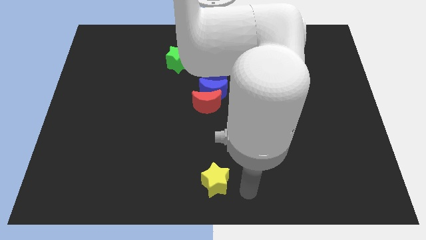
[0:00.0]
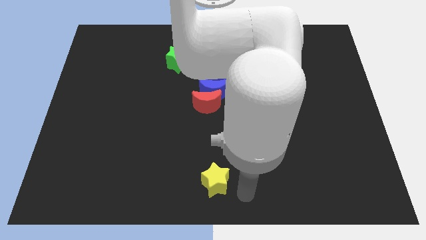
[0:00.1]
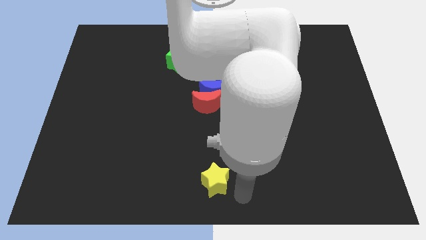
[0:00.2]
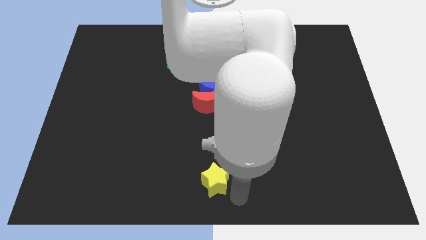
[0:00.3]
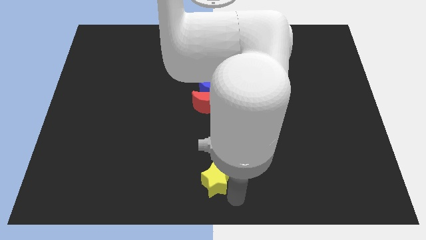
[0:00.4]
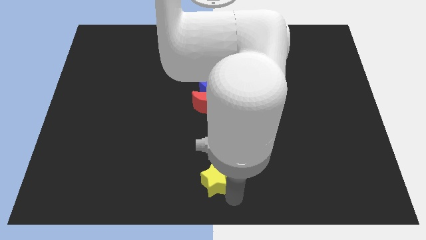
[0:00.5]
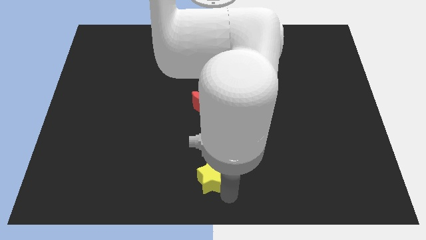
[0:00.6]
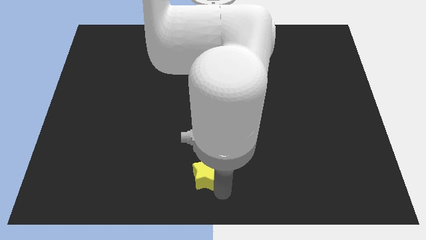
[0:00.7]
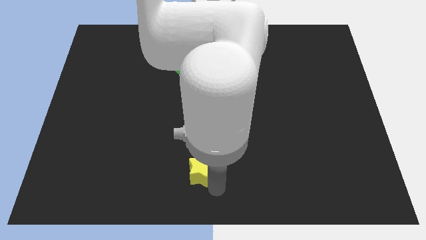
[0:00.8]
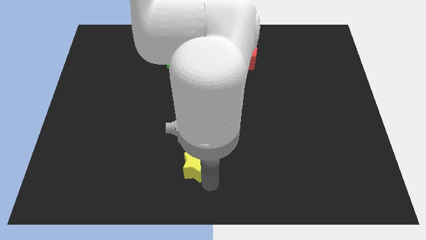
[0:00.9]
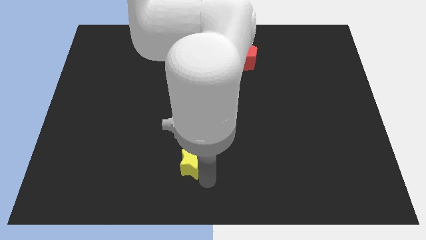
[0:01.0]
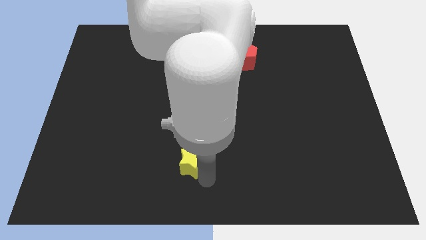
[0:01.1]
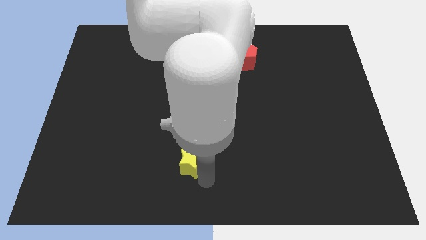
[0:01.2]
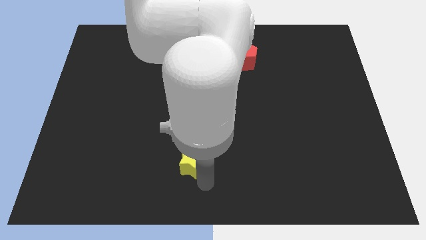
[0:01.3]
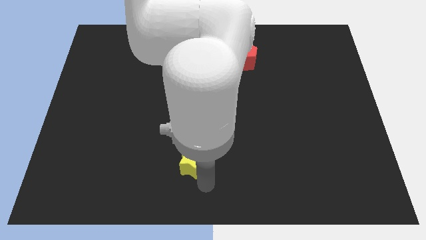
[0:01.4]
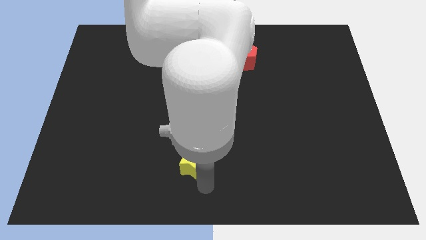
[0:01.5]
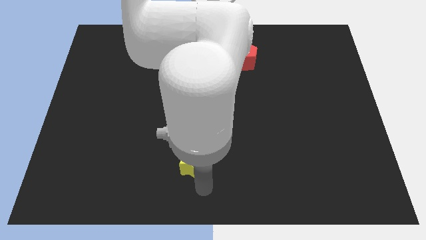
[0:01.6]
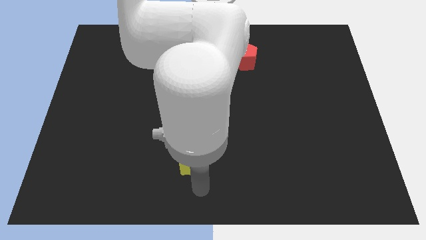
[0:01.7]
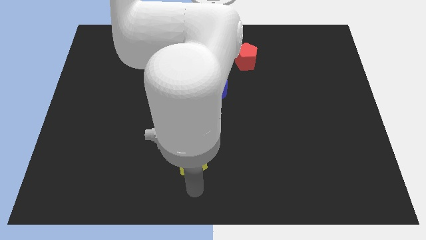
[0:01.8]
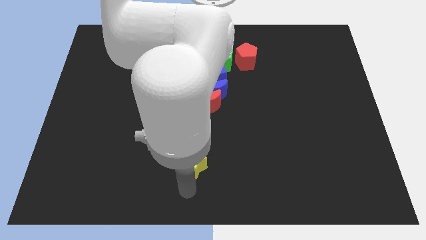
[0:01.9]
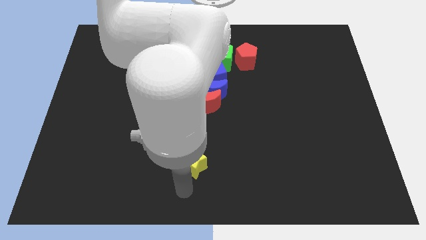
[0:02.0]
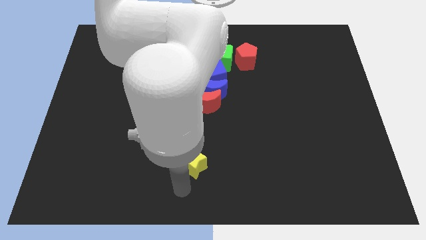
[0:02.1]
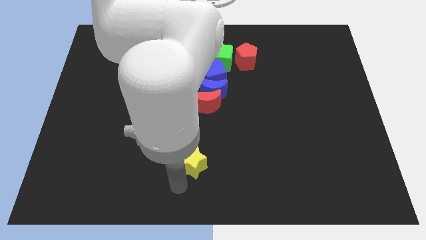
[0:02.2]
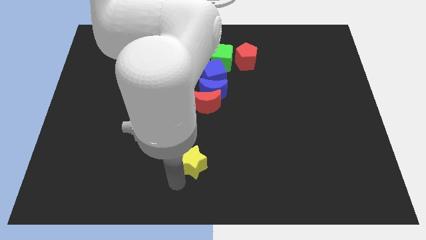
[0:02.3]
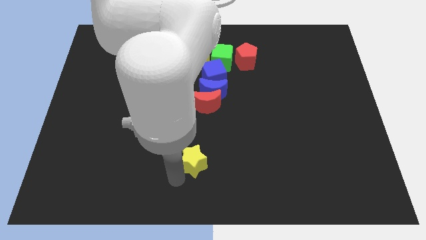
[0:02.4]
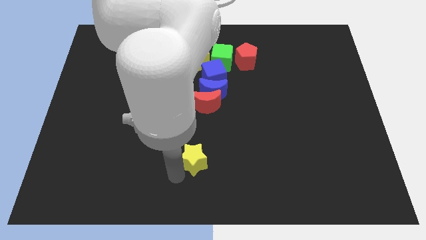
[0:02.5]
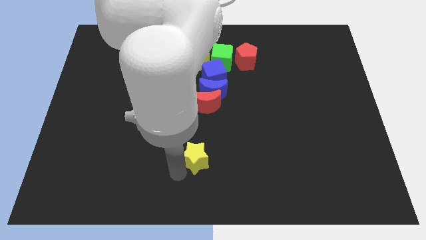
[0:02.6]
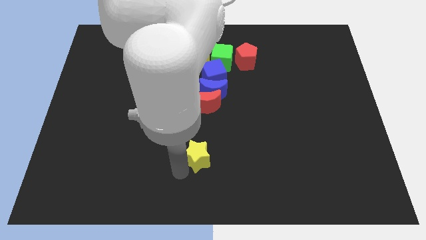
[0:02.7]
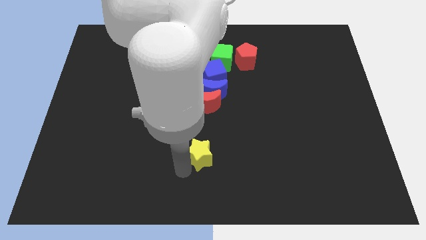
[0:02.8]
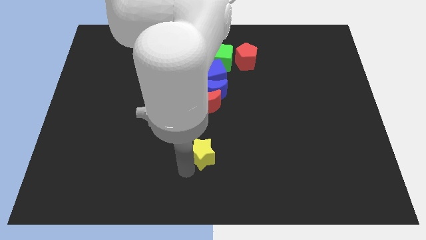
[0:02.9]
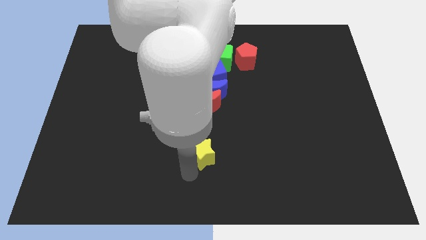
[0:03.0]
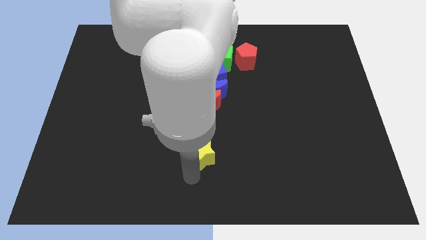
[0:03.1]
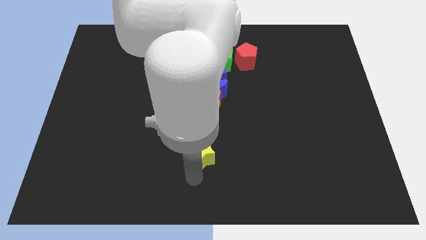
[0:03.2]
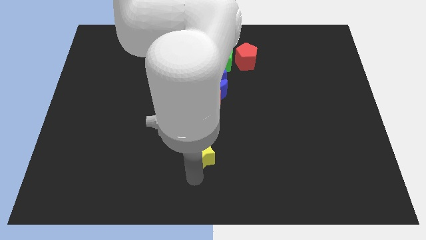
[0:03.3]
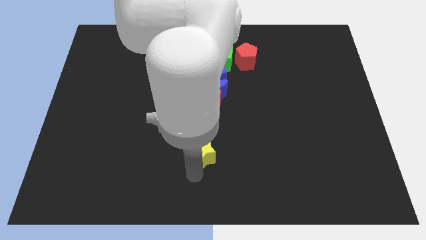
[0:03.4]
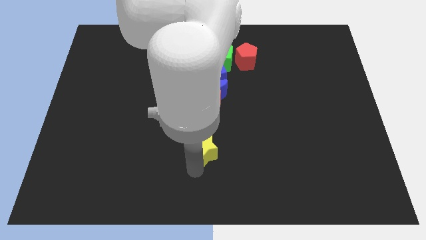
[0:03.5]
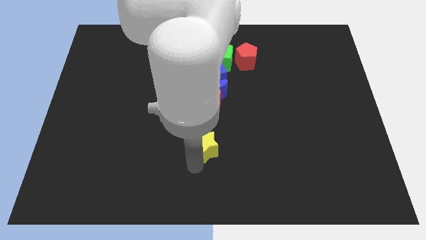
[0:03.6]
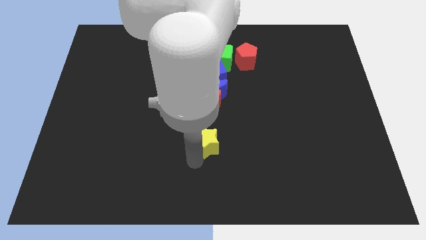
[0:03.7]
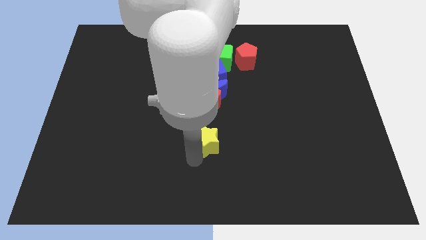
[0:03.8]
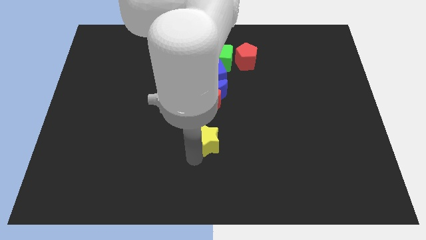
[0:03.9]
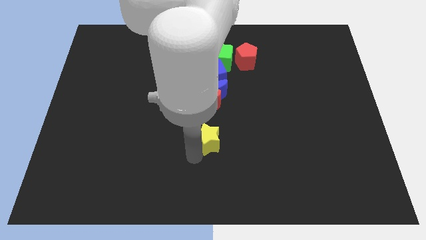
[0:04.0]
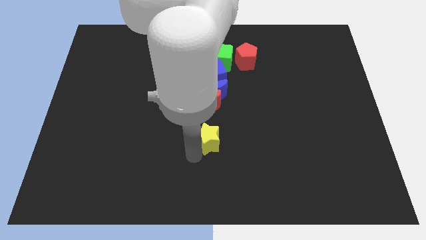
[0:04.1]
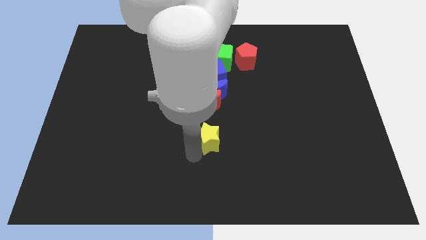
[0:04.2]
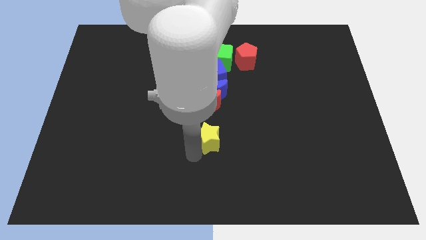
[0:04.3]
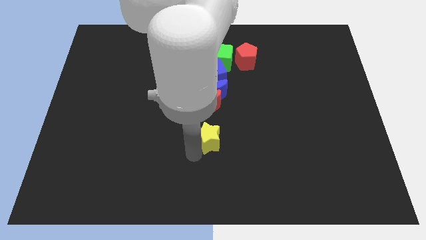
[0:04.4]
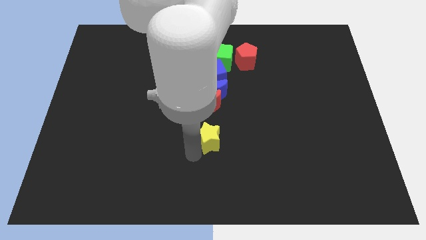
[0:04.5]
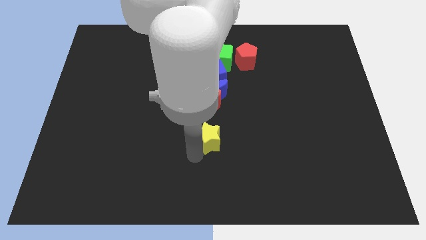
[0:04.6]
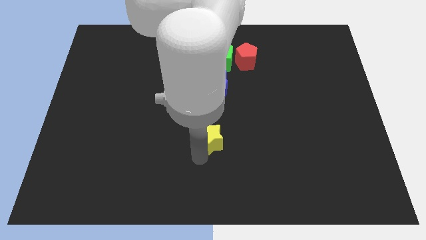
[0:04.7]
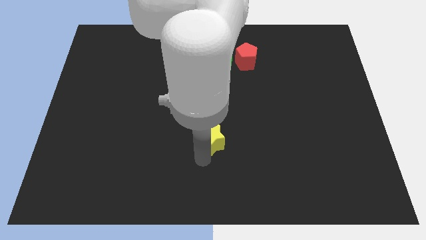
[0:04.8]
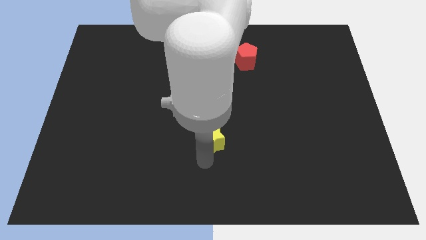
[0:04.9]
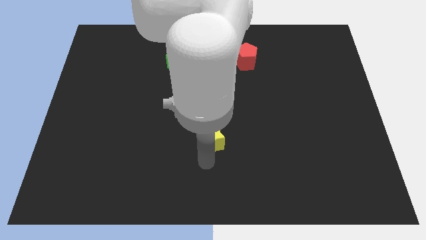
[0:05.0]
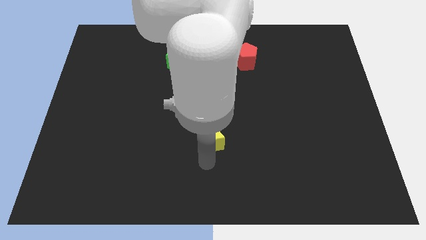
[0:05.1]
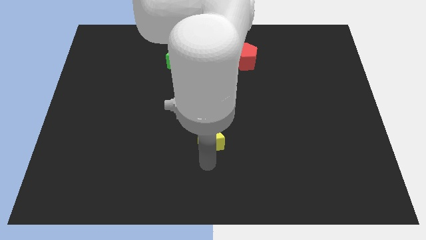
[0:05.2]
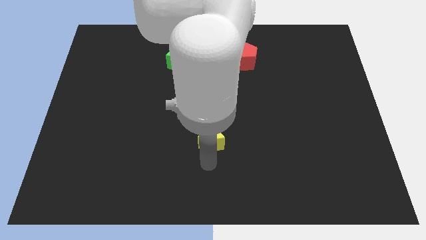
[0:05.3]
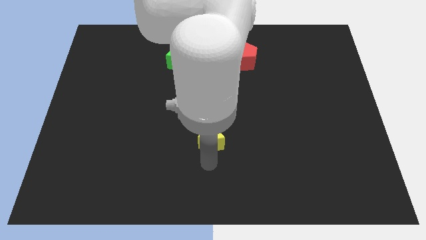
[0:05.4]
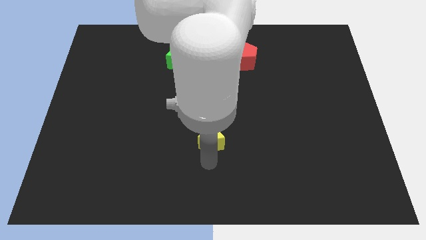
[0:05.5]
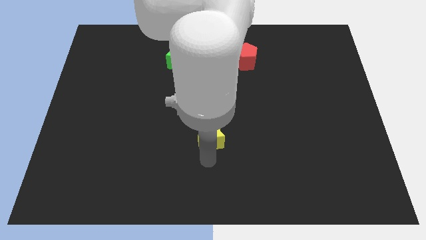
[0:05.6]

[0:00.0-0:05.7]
push the yellow star up towards the center of the board

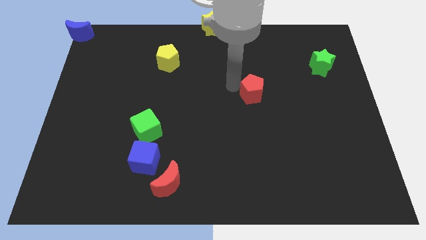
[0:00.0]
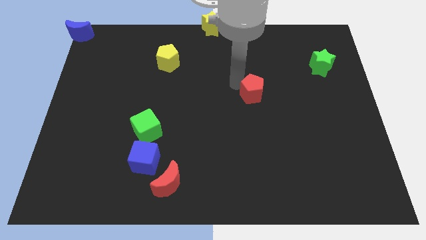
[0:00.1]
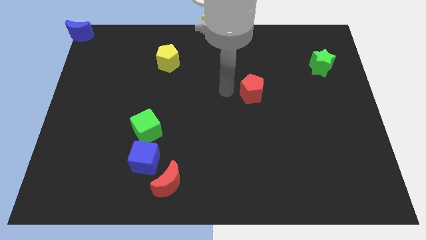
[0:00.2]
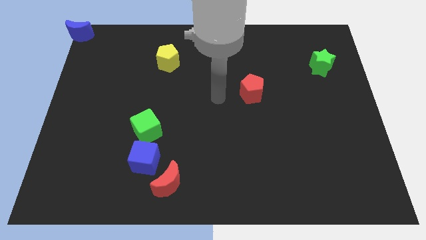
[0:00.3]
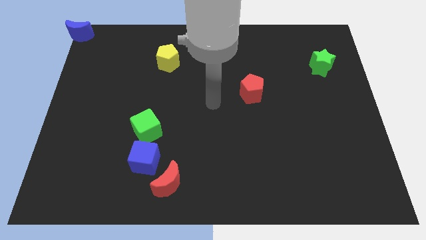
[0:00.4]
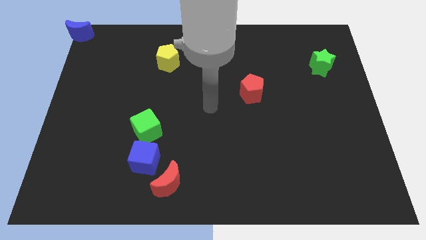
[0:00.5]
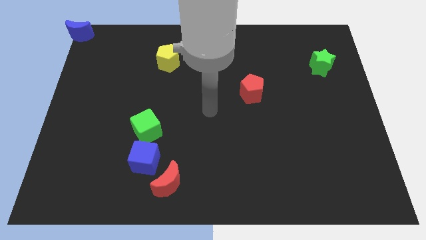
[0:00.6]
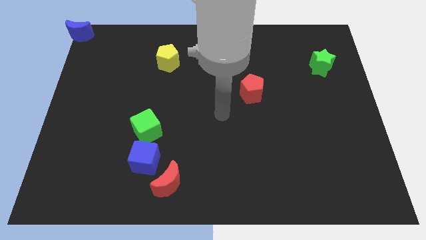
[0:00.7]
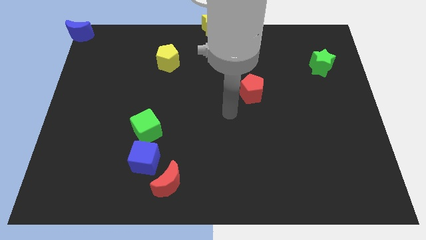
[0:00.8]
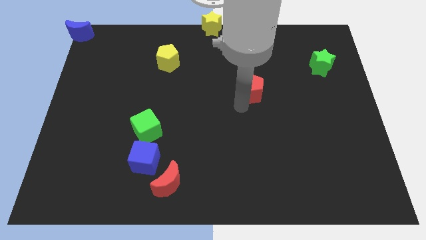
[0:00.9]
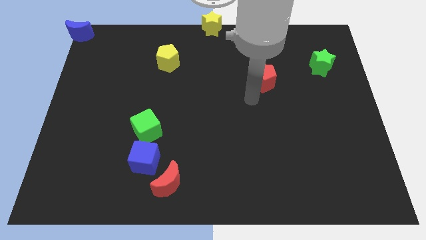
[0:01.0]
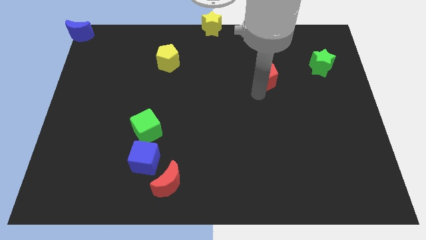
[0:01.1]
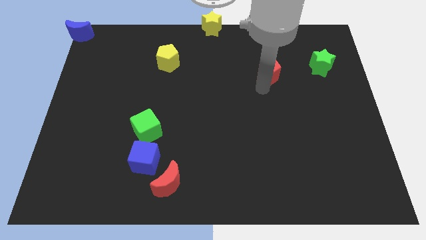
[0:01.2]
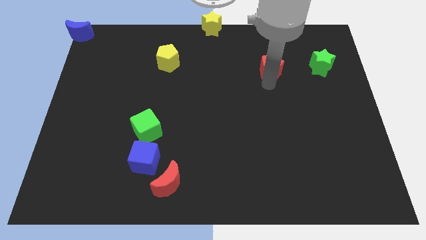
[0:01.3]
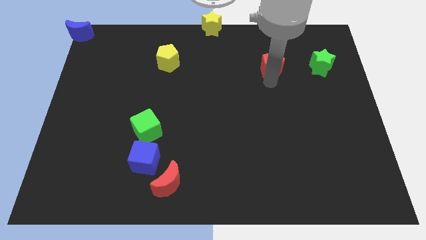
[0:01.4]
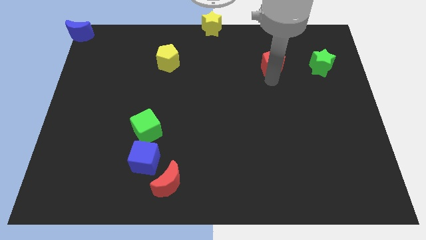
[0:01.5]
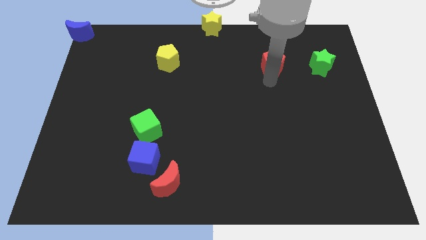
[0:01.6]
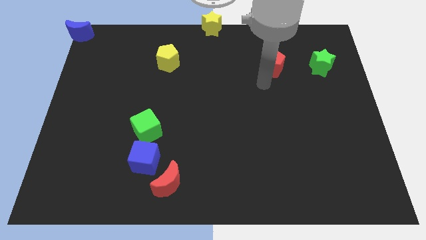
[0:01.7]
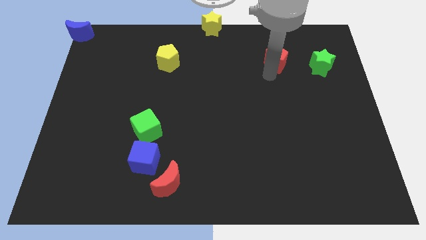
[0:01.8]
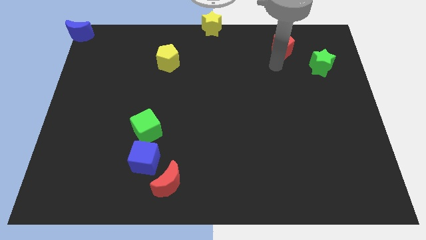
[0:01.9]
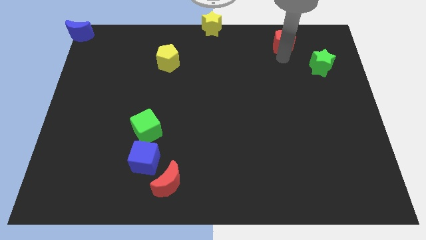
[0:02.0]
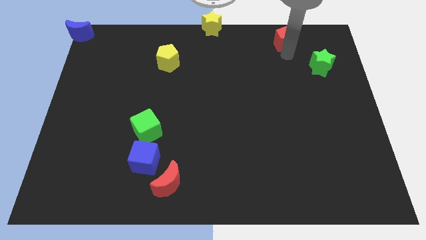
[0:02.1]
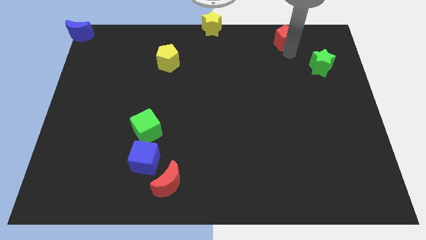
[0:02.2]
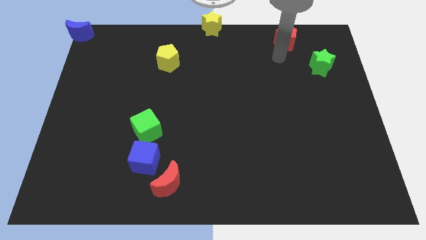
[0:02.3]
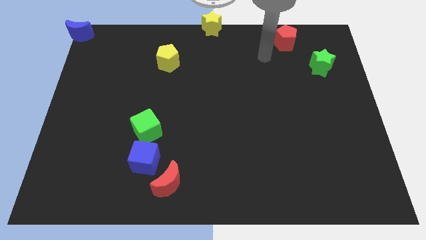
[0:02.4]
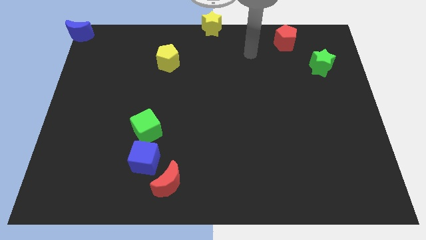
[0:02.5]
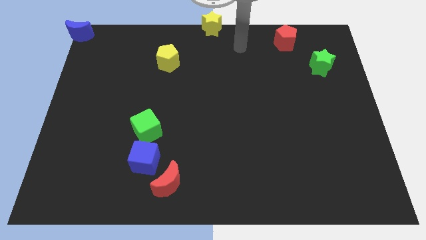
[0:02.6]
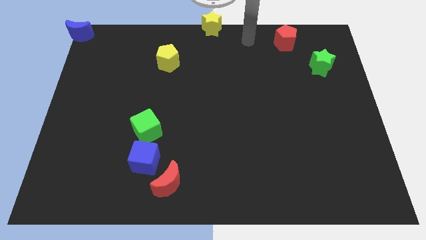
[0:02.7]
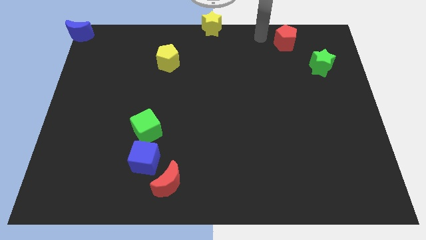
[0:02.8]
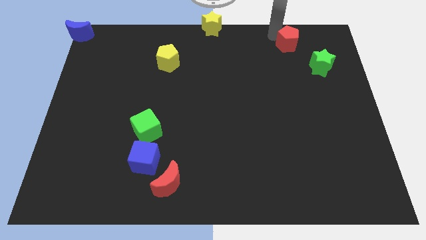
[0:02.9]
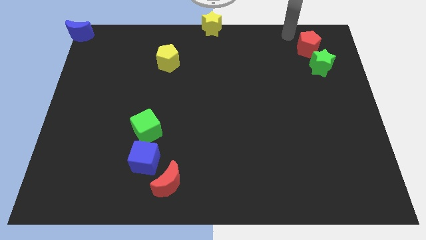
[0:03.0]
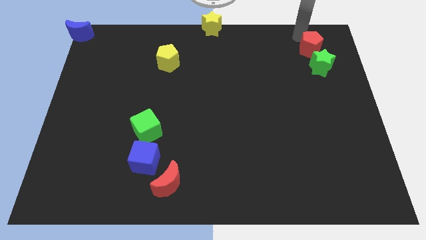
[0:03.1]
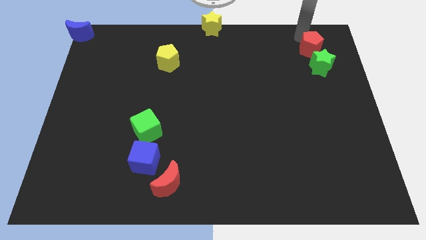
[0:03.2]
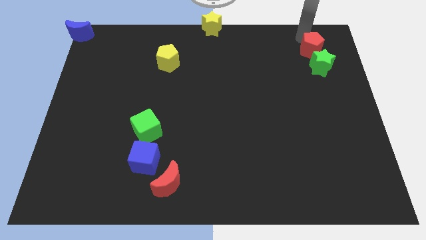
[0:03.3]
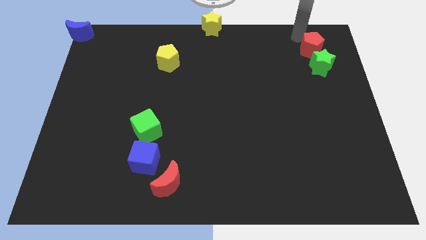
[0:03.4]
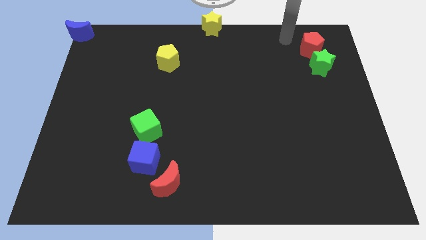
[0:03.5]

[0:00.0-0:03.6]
push the red pentagon to the top left side of the green star
